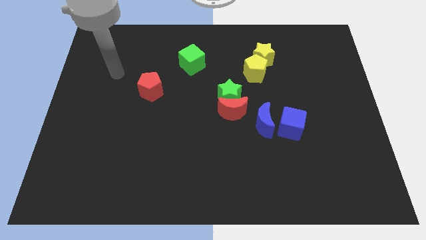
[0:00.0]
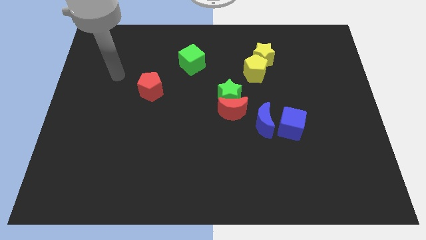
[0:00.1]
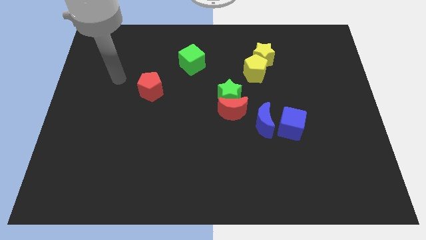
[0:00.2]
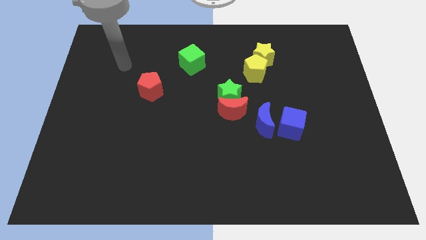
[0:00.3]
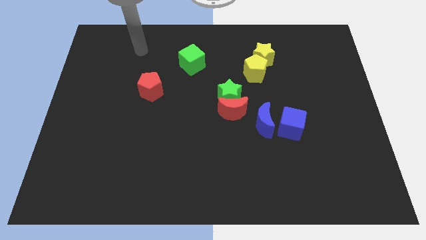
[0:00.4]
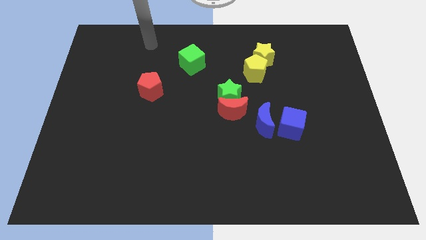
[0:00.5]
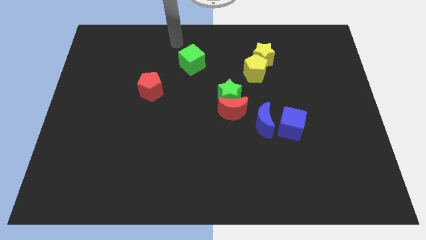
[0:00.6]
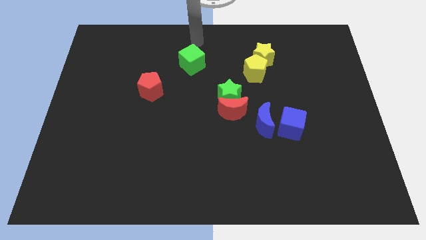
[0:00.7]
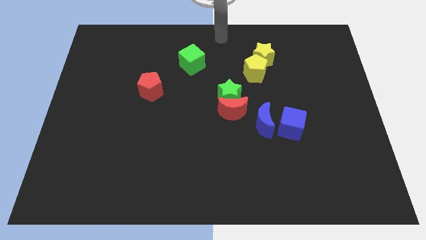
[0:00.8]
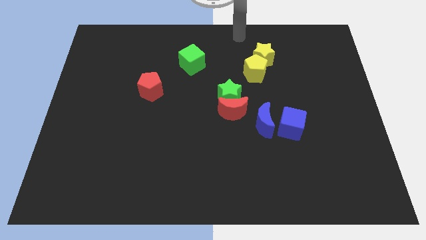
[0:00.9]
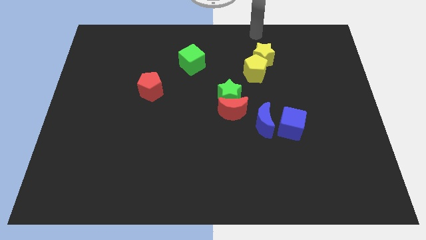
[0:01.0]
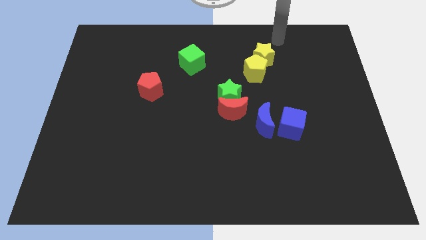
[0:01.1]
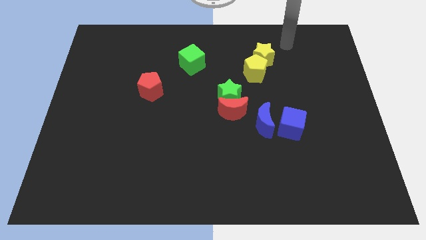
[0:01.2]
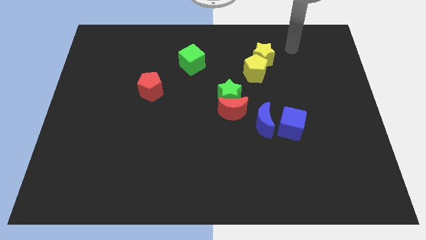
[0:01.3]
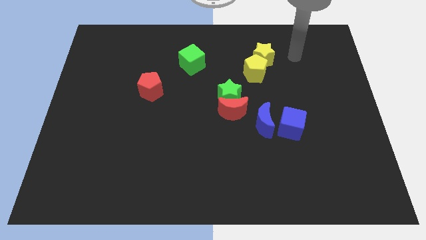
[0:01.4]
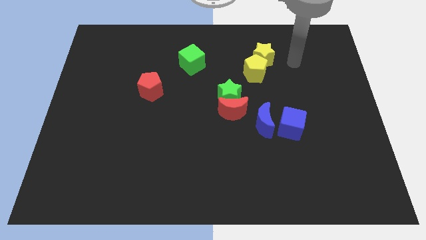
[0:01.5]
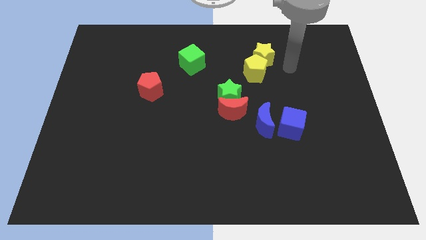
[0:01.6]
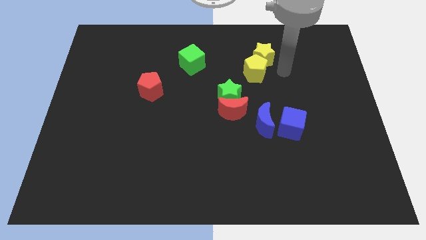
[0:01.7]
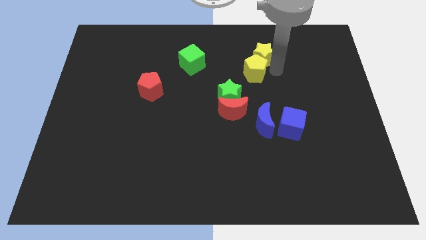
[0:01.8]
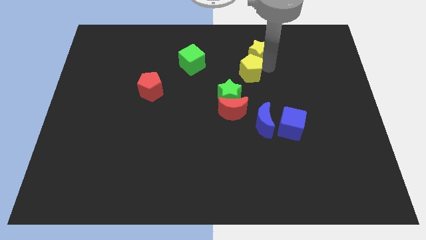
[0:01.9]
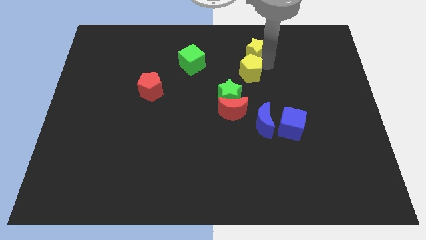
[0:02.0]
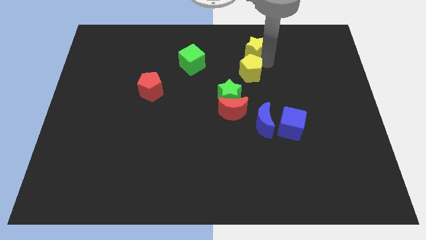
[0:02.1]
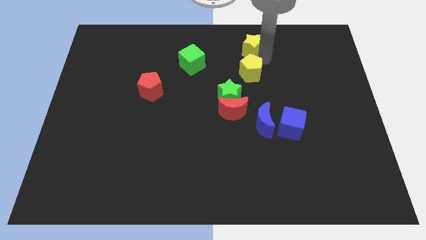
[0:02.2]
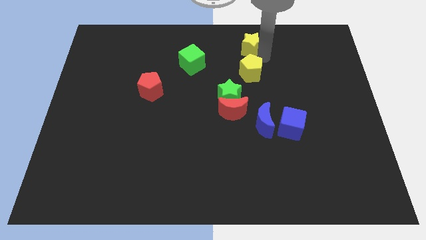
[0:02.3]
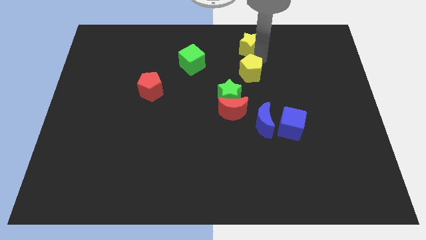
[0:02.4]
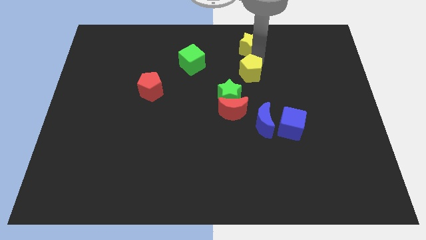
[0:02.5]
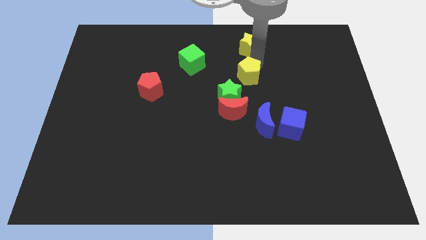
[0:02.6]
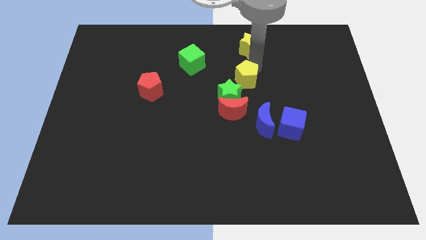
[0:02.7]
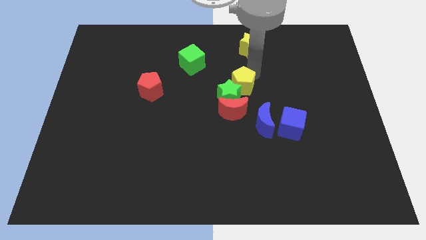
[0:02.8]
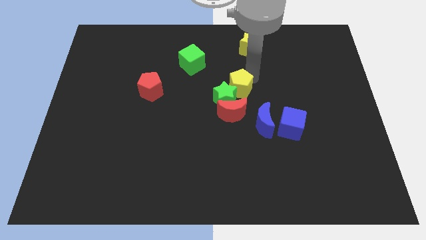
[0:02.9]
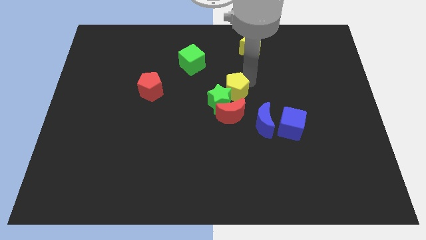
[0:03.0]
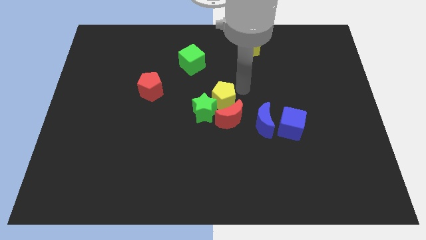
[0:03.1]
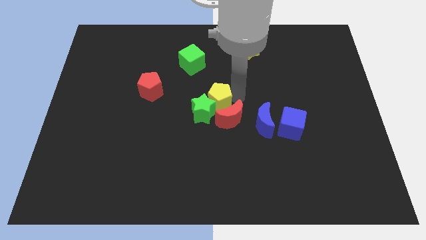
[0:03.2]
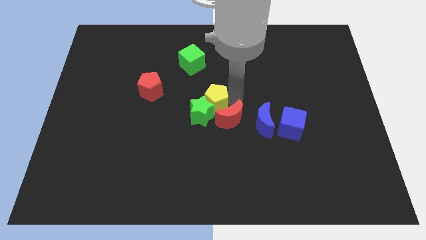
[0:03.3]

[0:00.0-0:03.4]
push the yellow pentagon to the red moon

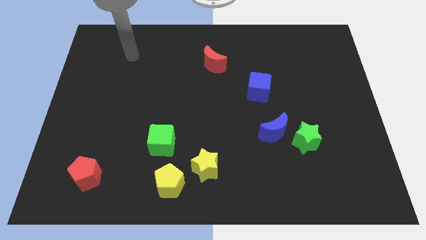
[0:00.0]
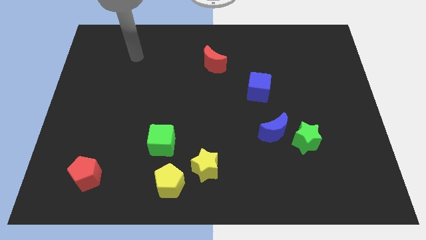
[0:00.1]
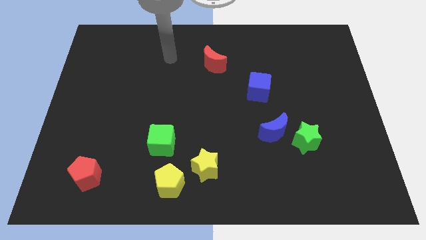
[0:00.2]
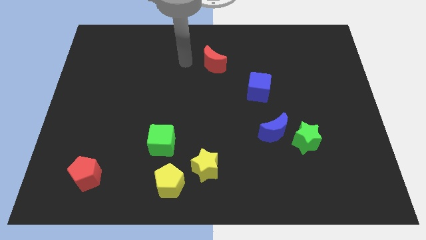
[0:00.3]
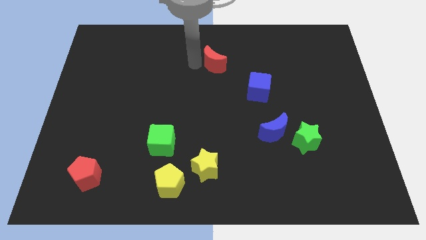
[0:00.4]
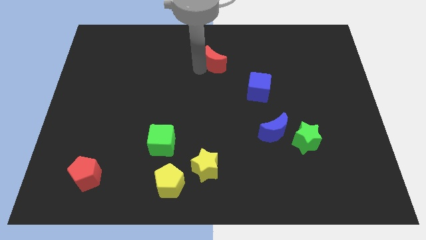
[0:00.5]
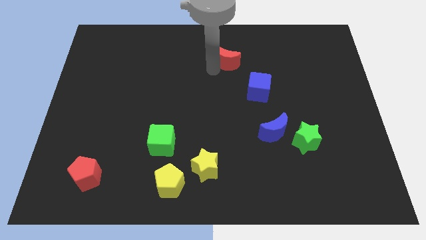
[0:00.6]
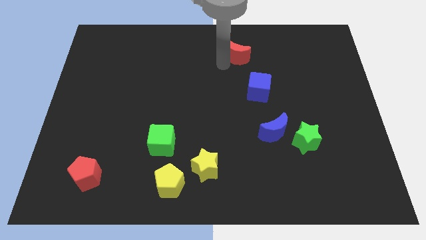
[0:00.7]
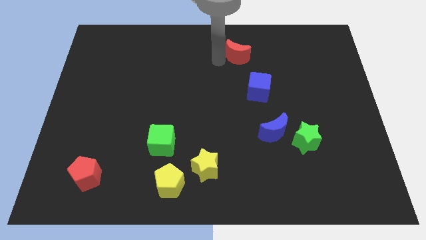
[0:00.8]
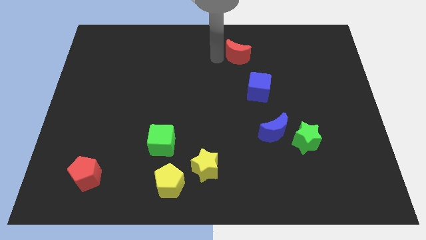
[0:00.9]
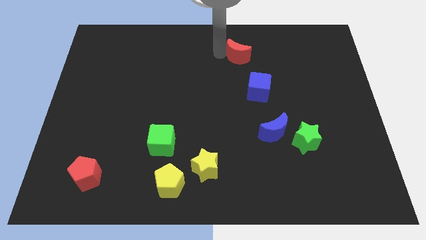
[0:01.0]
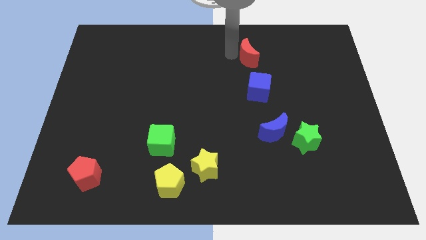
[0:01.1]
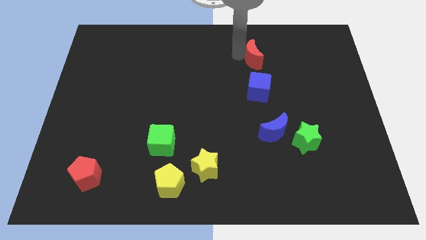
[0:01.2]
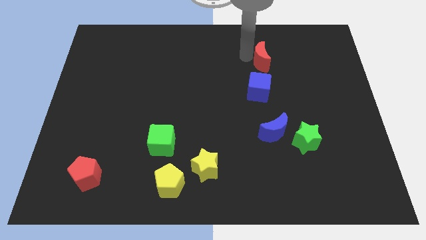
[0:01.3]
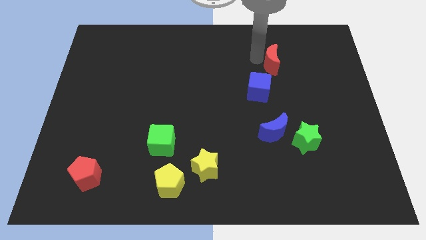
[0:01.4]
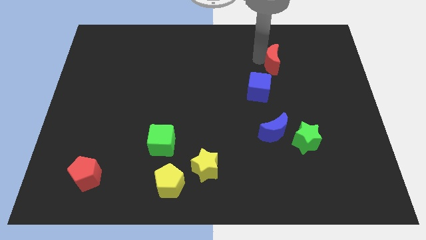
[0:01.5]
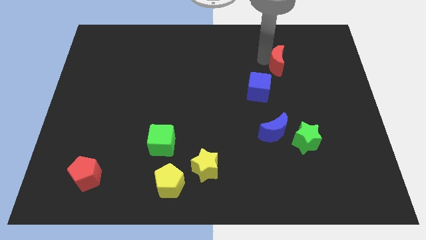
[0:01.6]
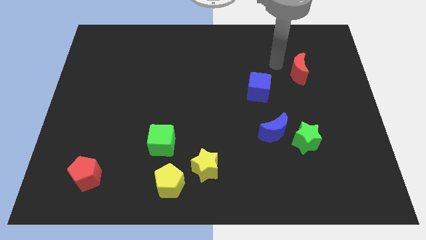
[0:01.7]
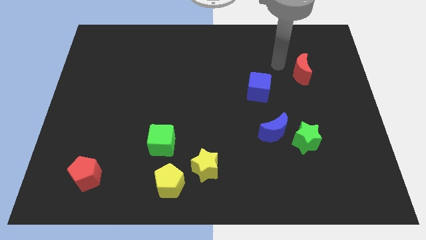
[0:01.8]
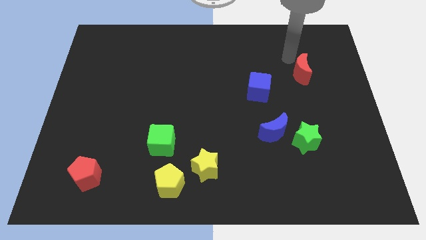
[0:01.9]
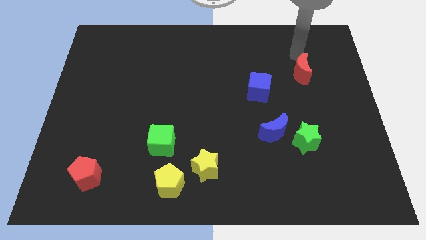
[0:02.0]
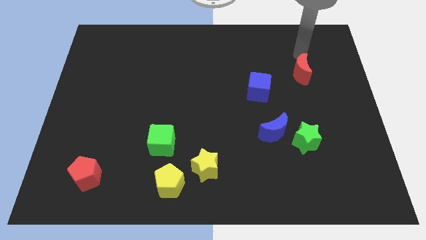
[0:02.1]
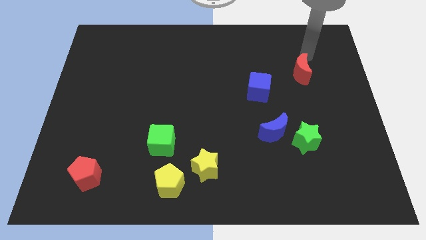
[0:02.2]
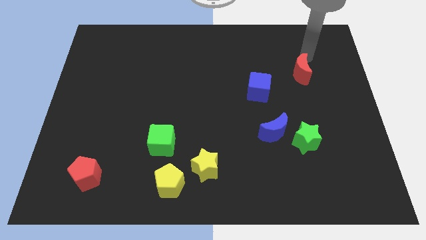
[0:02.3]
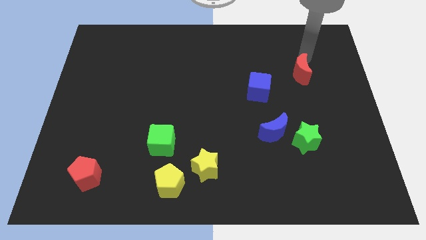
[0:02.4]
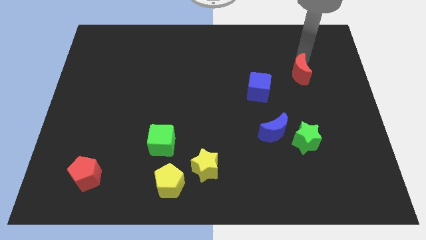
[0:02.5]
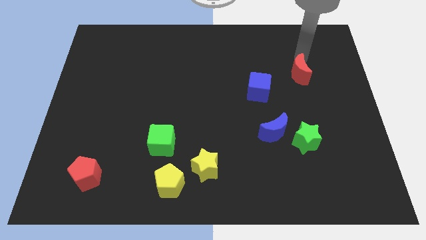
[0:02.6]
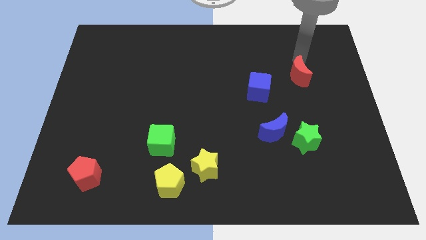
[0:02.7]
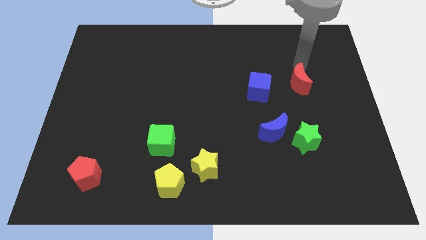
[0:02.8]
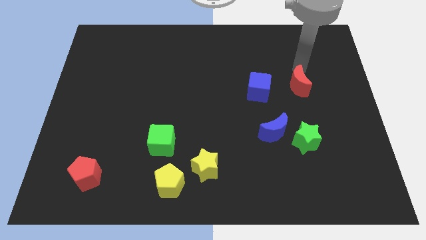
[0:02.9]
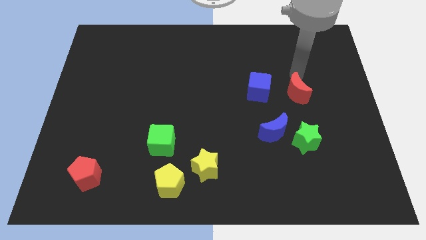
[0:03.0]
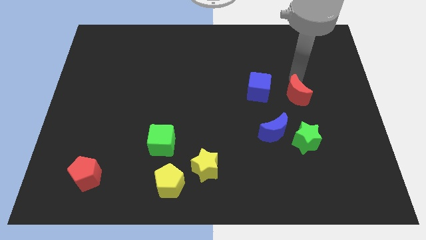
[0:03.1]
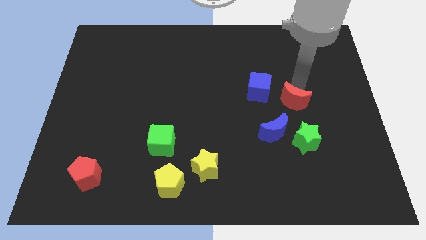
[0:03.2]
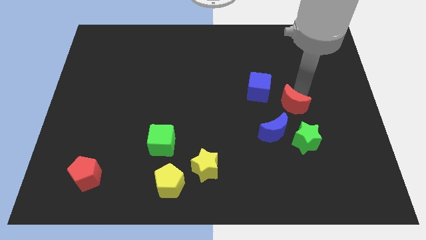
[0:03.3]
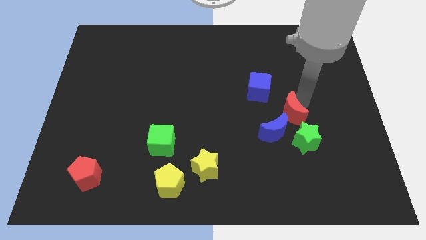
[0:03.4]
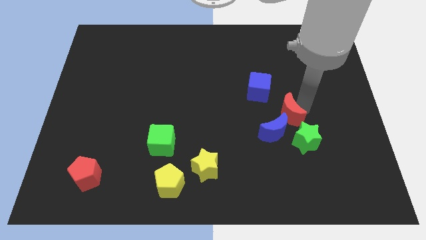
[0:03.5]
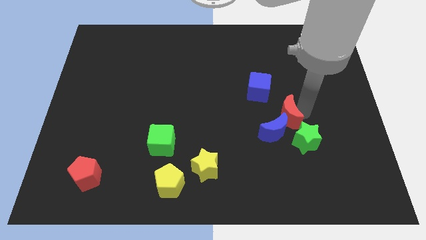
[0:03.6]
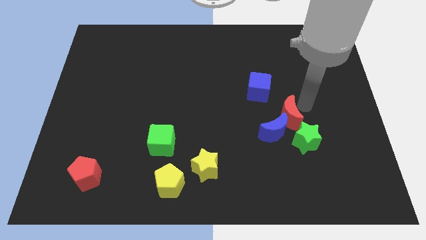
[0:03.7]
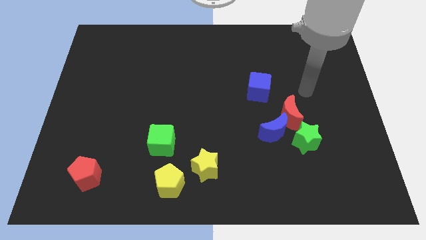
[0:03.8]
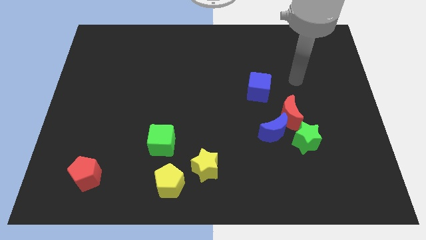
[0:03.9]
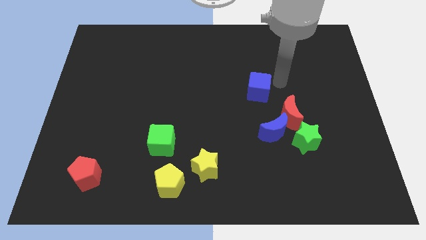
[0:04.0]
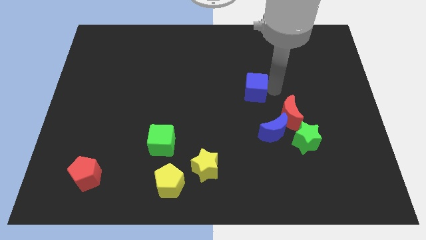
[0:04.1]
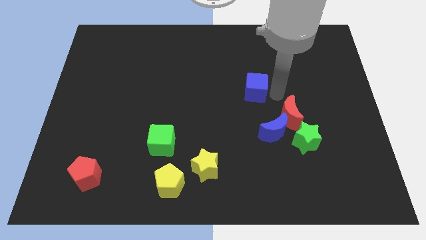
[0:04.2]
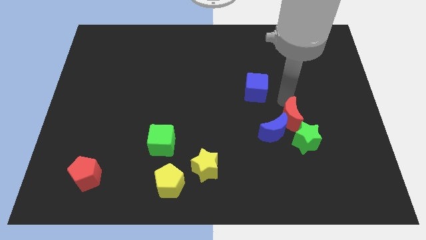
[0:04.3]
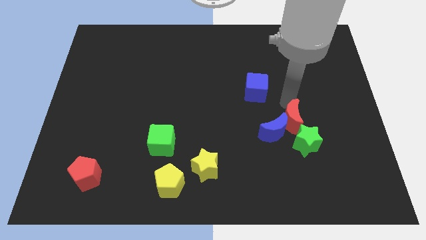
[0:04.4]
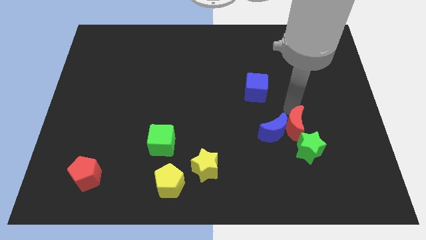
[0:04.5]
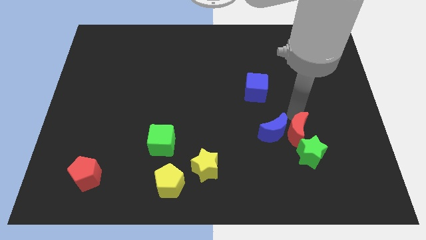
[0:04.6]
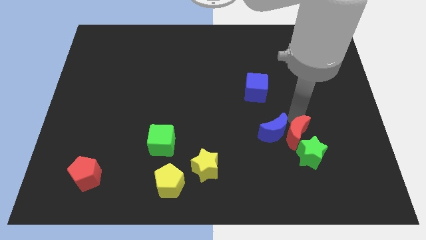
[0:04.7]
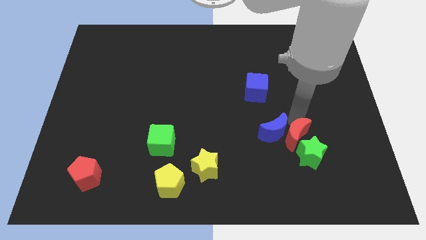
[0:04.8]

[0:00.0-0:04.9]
move the red moon next to the green star

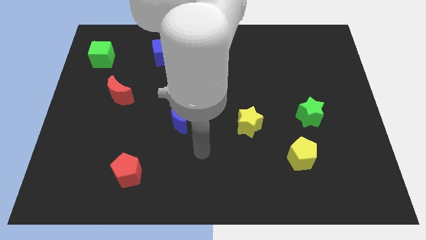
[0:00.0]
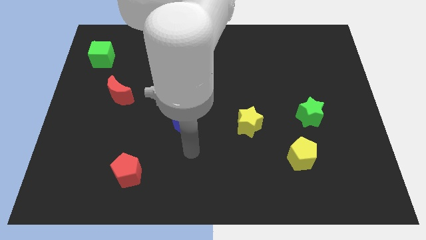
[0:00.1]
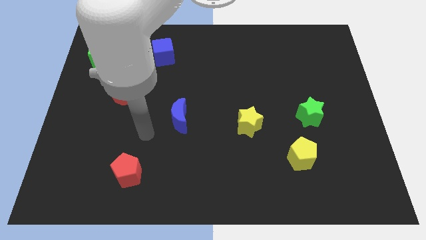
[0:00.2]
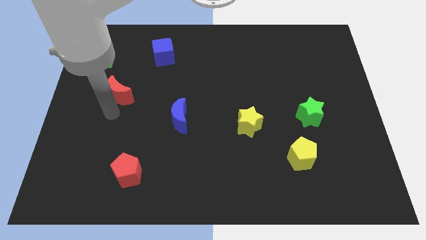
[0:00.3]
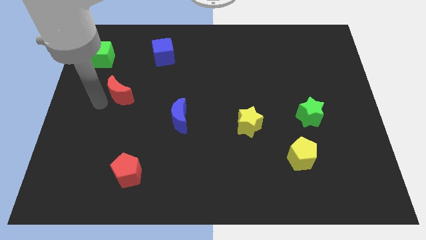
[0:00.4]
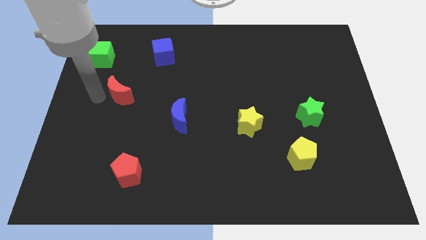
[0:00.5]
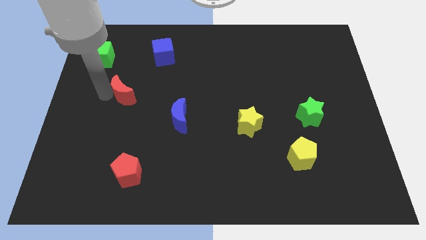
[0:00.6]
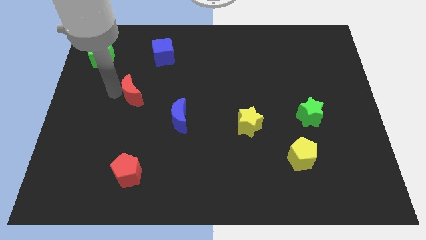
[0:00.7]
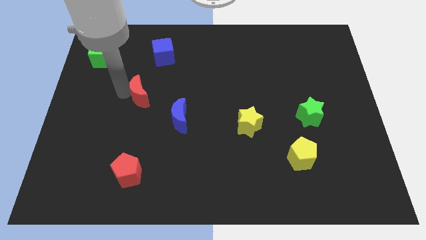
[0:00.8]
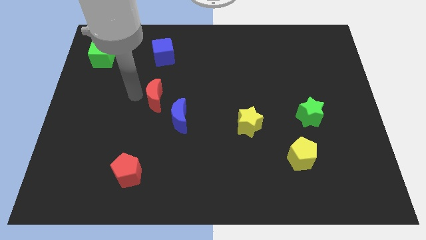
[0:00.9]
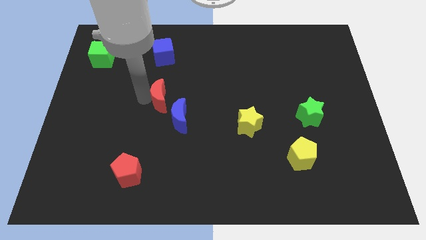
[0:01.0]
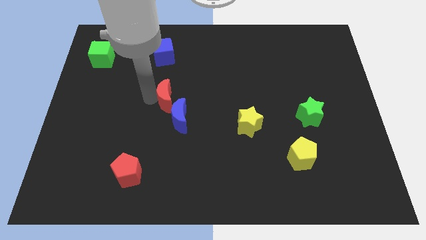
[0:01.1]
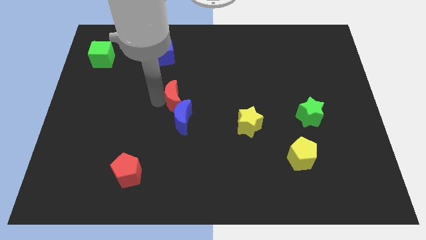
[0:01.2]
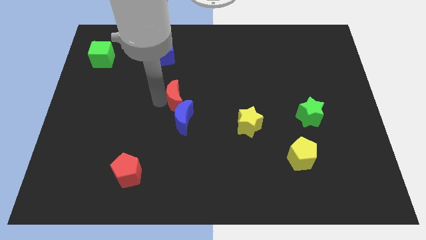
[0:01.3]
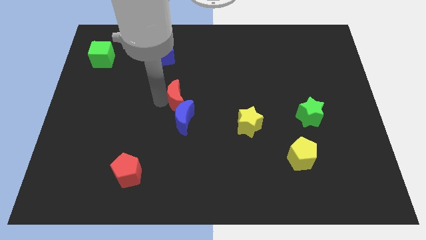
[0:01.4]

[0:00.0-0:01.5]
put the red moon towards the blue moon
